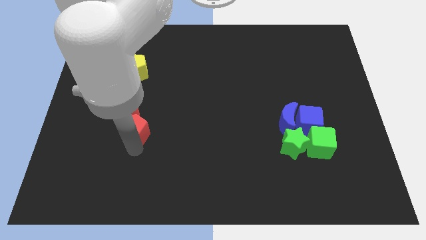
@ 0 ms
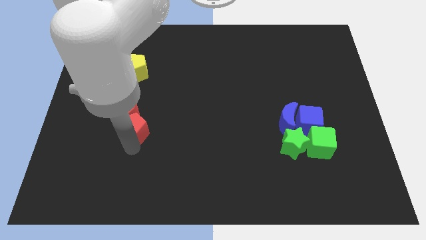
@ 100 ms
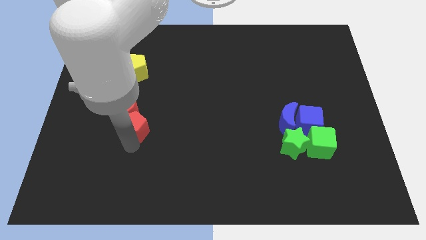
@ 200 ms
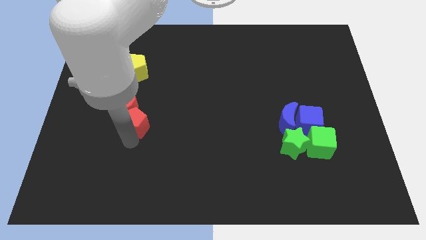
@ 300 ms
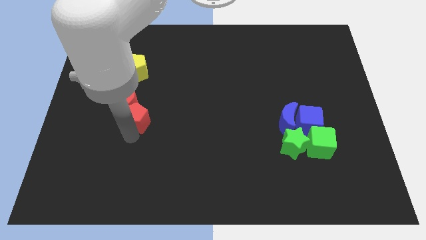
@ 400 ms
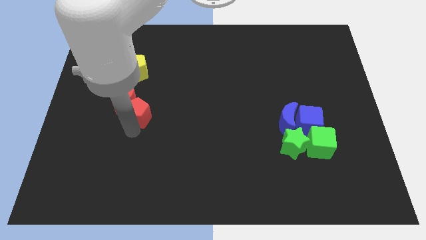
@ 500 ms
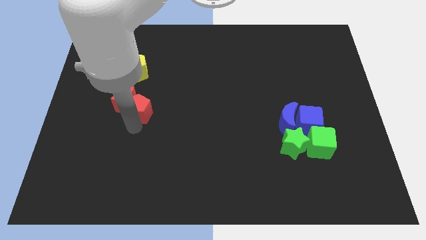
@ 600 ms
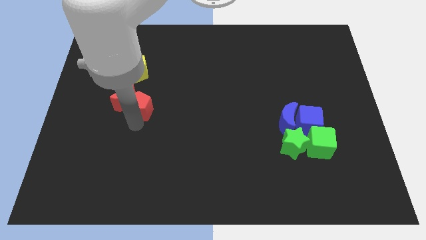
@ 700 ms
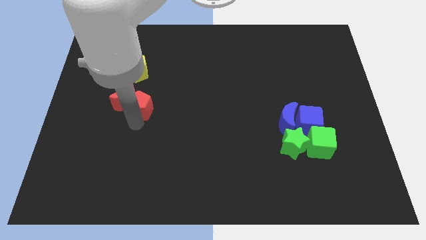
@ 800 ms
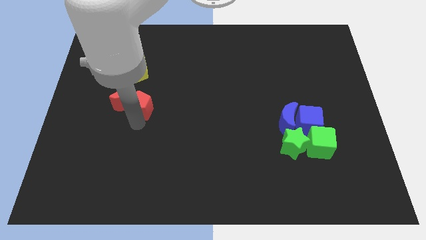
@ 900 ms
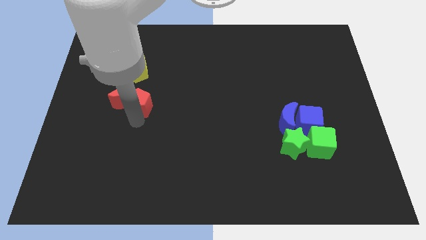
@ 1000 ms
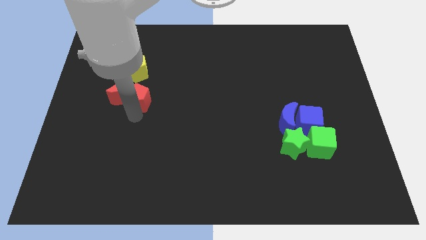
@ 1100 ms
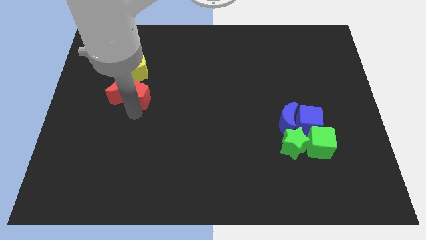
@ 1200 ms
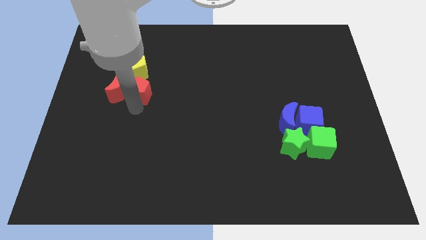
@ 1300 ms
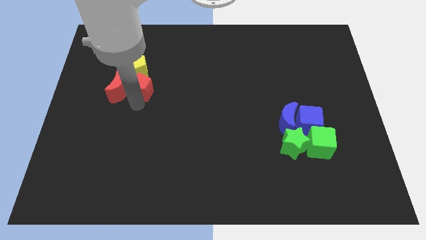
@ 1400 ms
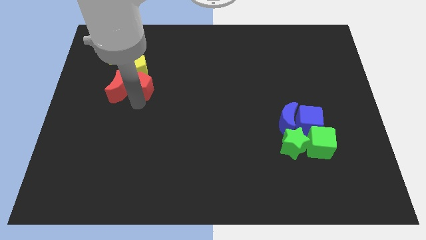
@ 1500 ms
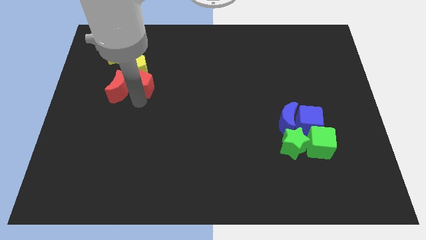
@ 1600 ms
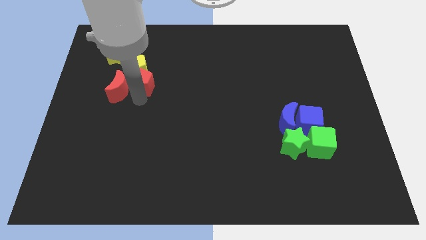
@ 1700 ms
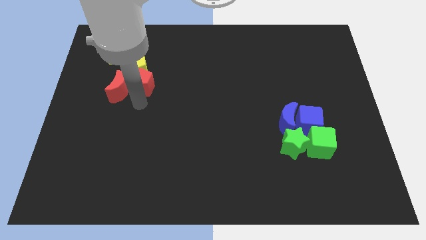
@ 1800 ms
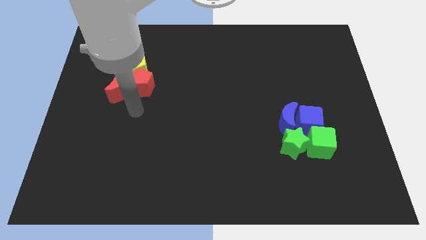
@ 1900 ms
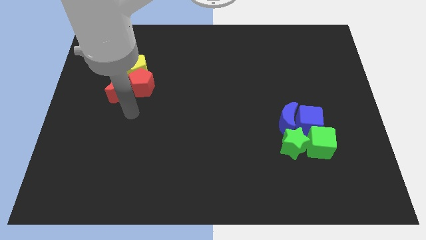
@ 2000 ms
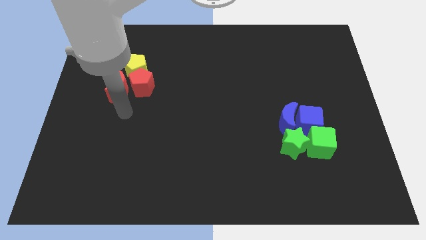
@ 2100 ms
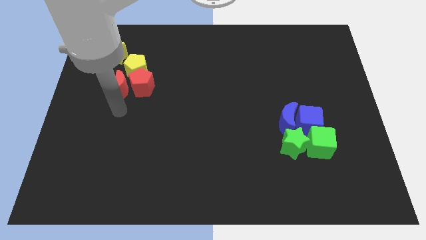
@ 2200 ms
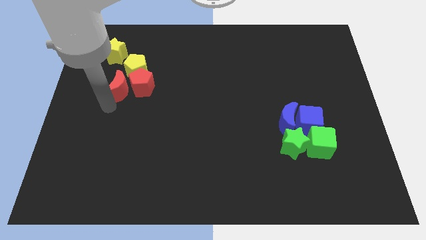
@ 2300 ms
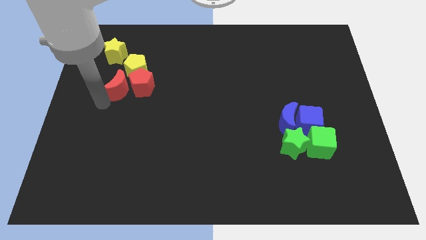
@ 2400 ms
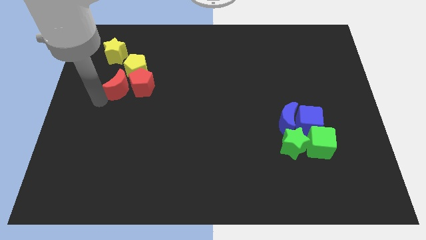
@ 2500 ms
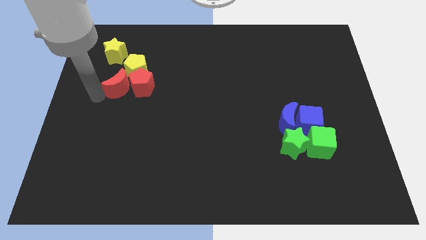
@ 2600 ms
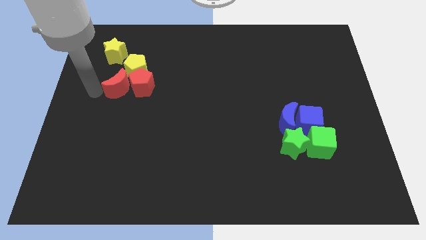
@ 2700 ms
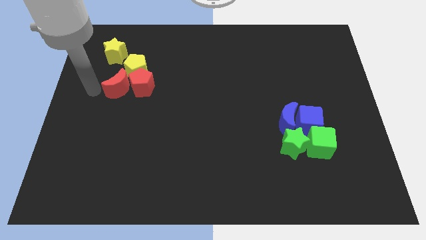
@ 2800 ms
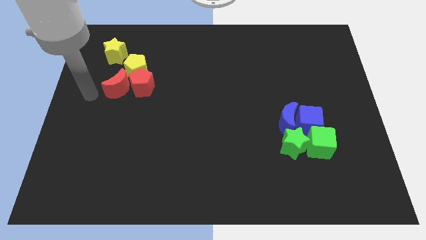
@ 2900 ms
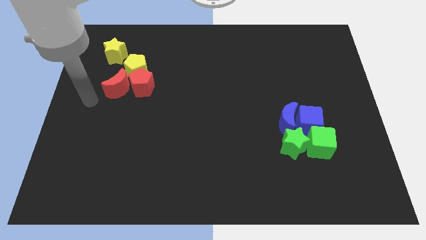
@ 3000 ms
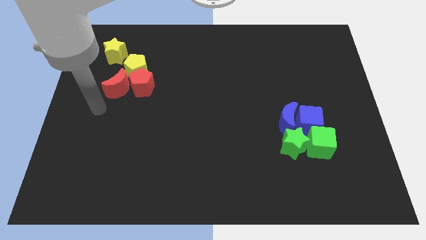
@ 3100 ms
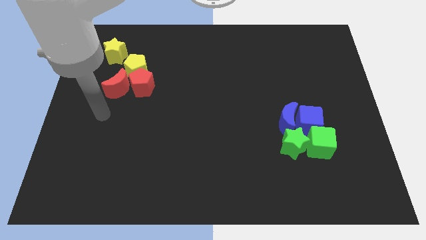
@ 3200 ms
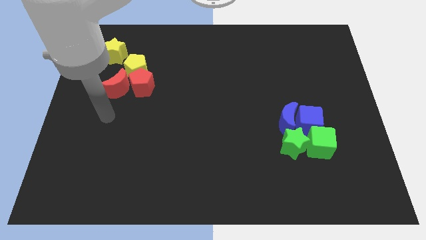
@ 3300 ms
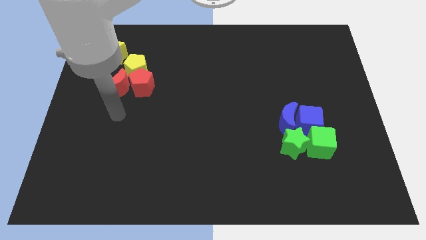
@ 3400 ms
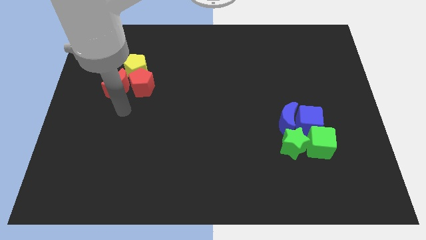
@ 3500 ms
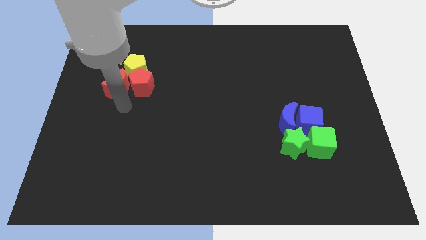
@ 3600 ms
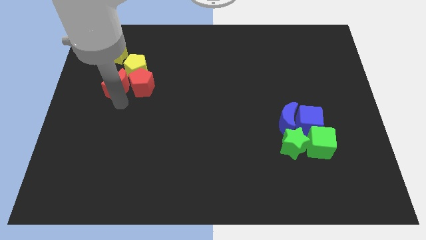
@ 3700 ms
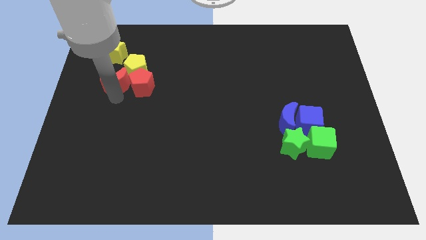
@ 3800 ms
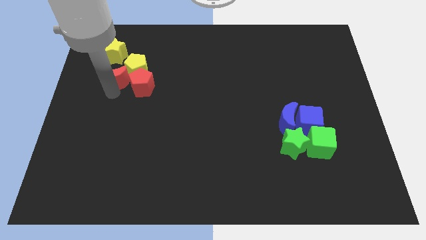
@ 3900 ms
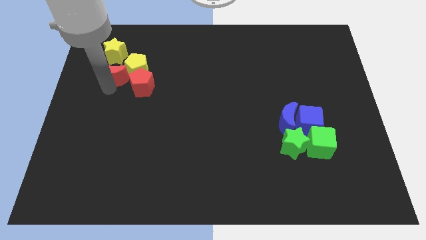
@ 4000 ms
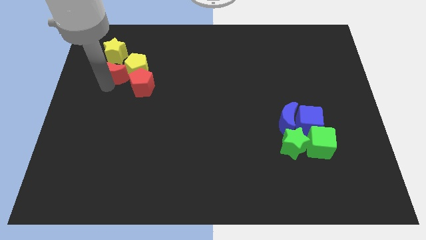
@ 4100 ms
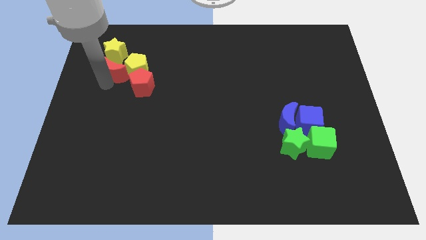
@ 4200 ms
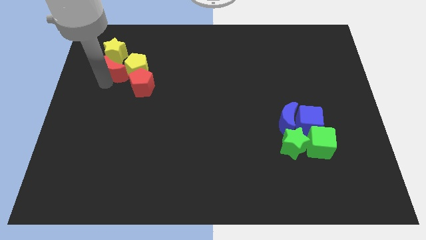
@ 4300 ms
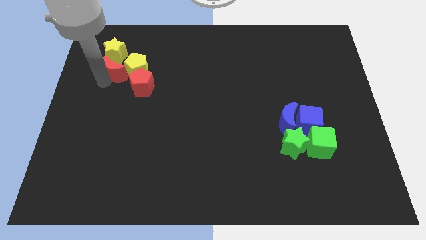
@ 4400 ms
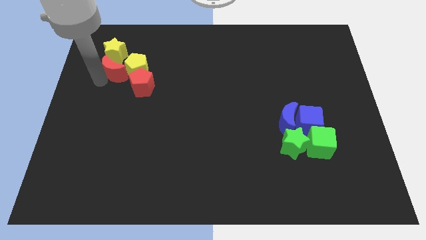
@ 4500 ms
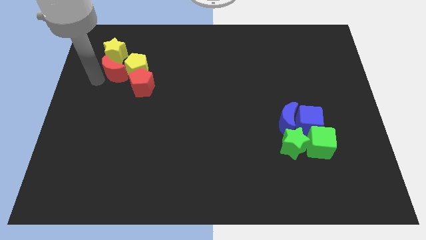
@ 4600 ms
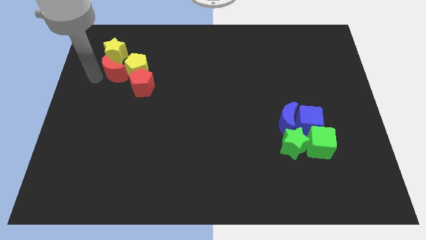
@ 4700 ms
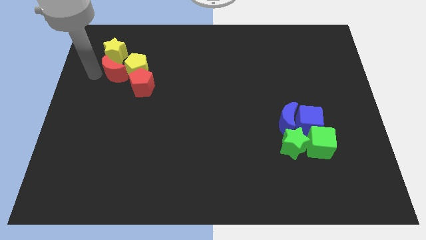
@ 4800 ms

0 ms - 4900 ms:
separate red moon and the red pentagon from each other

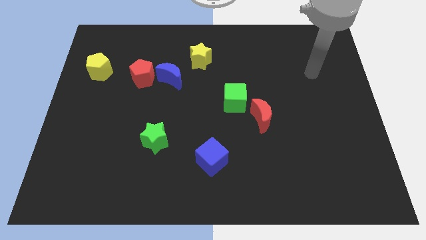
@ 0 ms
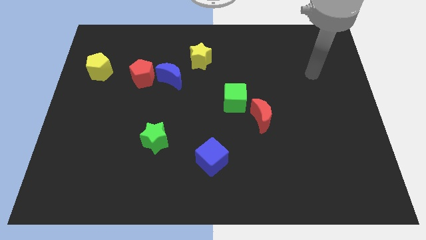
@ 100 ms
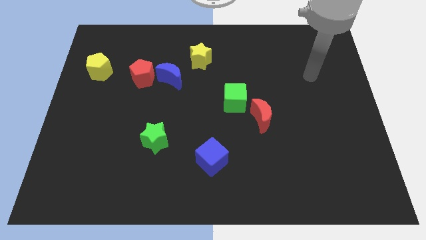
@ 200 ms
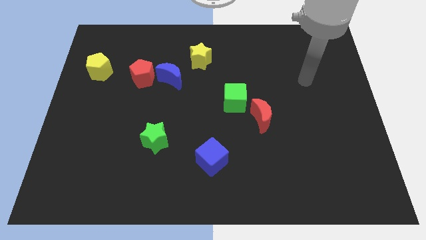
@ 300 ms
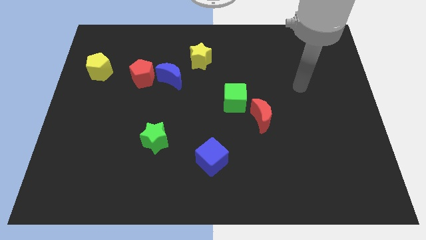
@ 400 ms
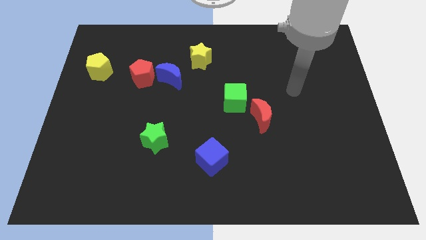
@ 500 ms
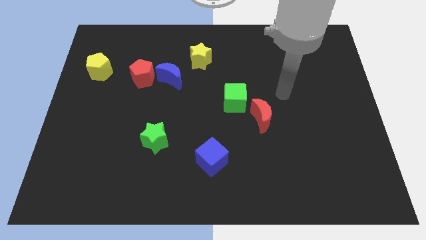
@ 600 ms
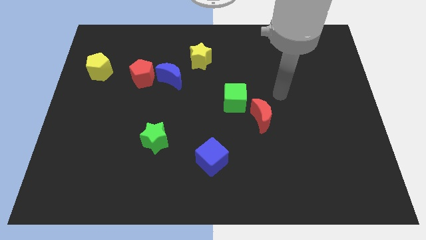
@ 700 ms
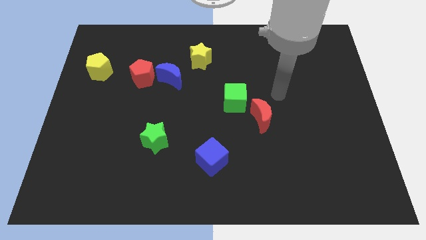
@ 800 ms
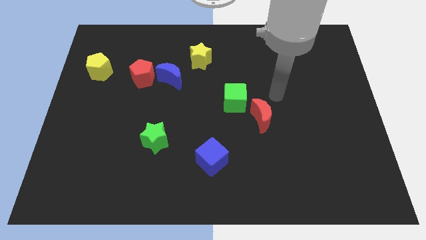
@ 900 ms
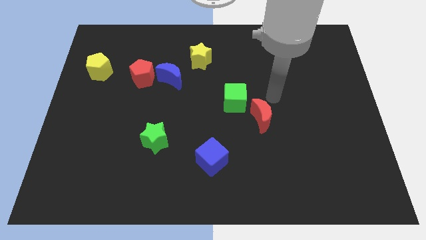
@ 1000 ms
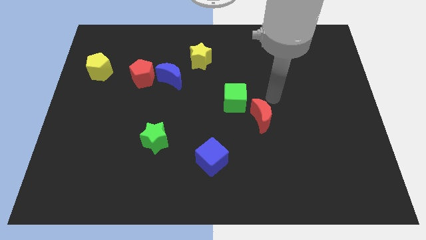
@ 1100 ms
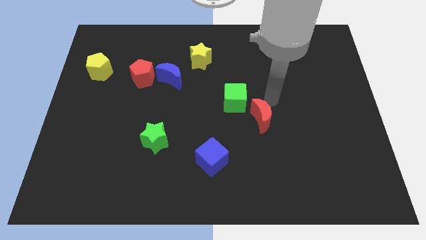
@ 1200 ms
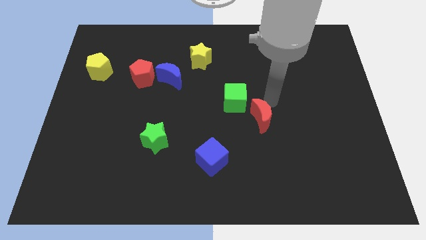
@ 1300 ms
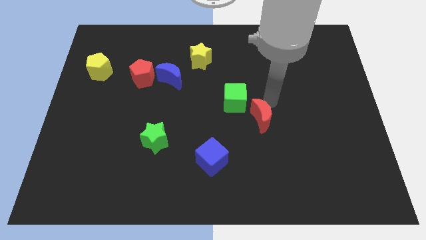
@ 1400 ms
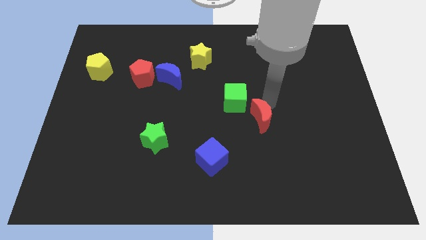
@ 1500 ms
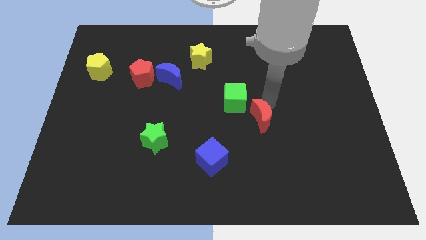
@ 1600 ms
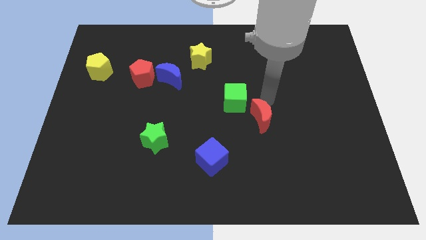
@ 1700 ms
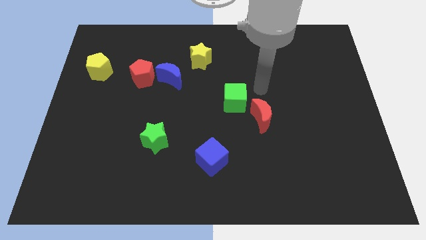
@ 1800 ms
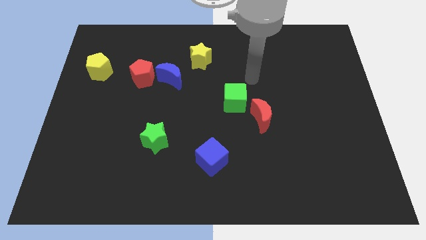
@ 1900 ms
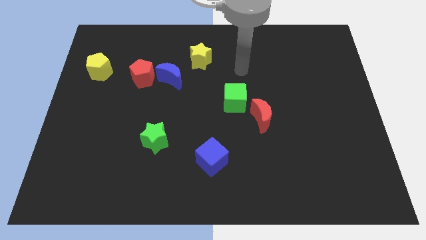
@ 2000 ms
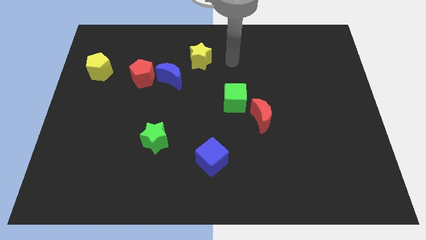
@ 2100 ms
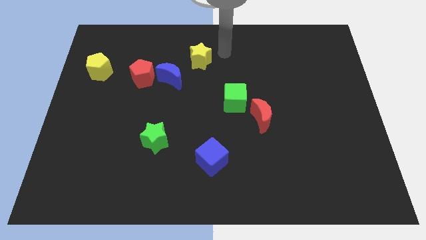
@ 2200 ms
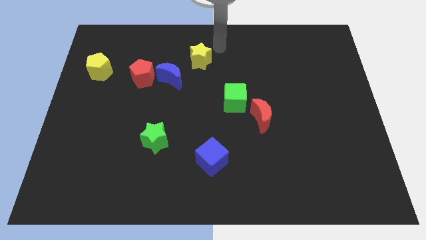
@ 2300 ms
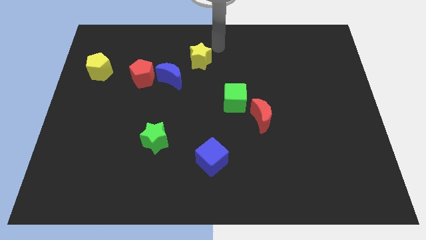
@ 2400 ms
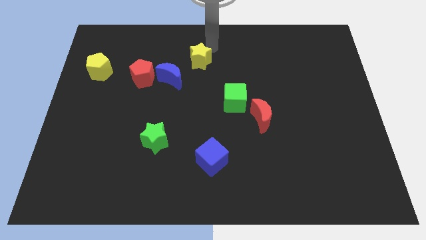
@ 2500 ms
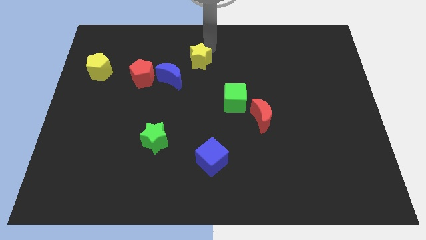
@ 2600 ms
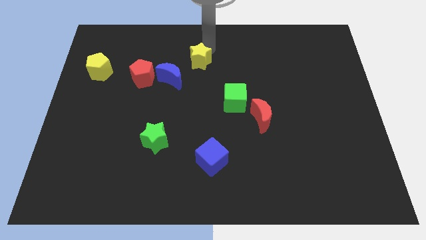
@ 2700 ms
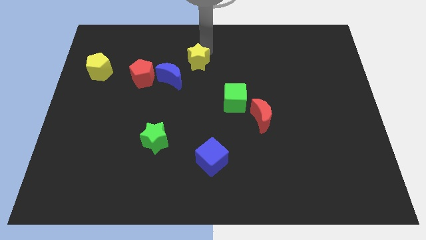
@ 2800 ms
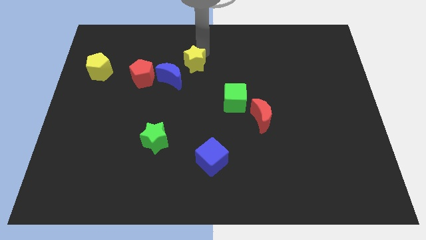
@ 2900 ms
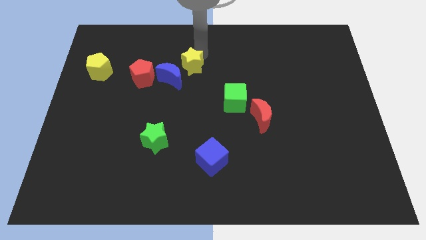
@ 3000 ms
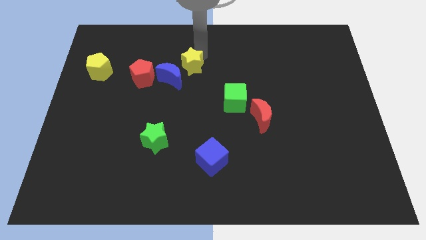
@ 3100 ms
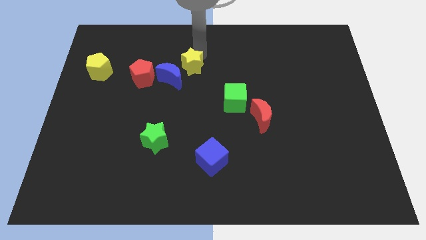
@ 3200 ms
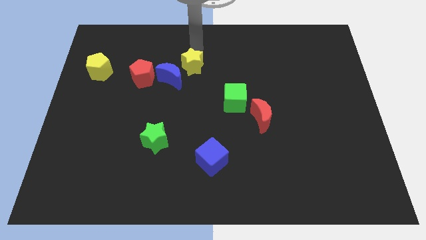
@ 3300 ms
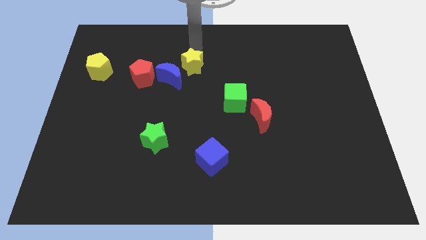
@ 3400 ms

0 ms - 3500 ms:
push yellow star slightly towards blue moon

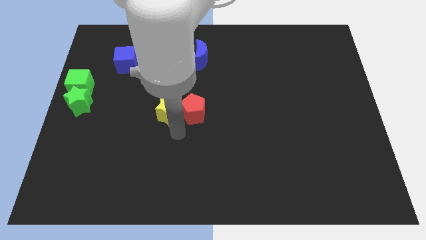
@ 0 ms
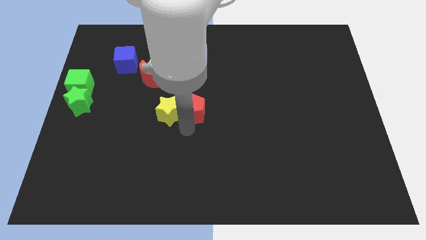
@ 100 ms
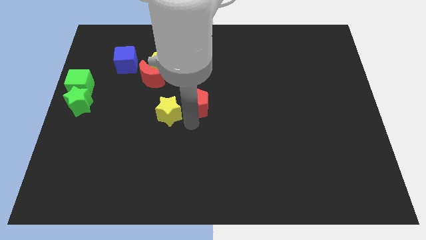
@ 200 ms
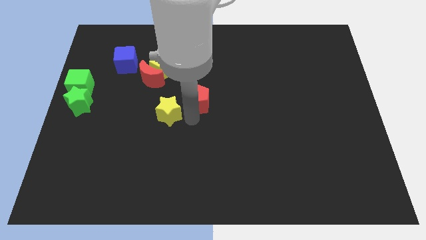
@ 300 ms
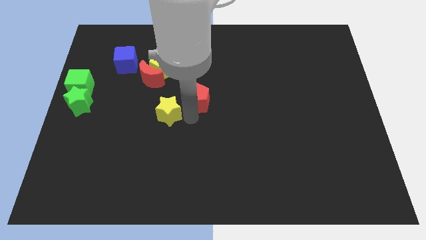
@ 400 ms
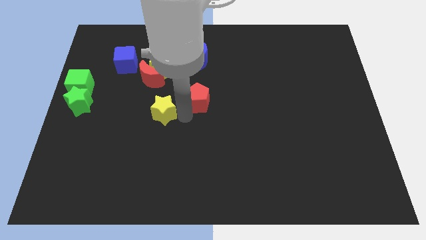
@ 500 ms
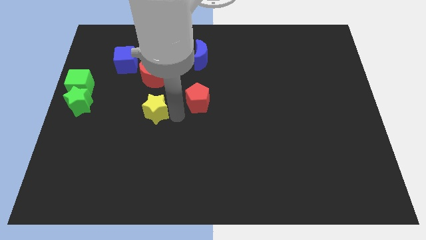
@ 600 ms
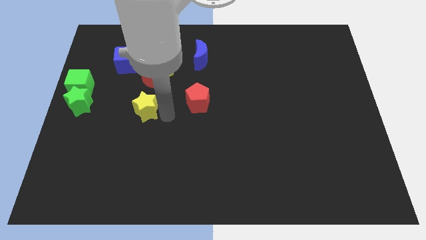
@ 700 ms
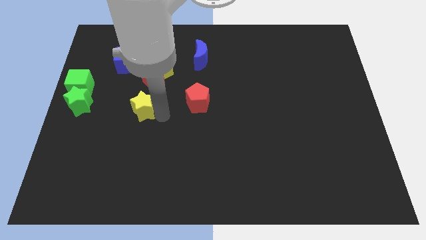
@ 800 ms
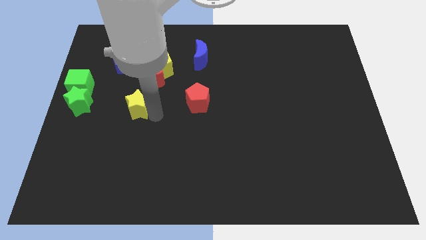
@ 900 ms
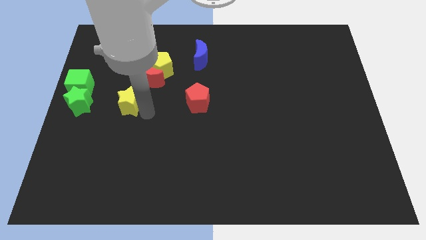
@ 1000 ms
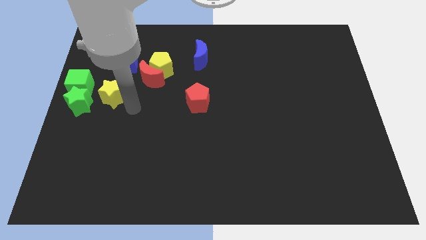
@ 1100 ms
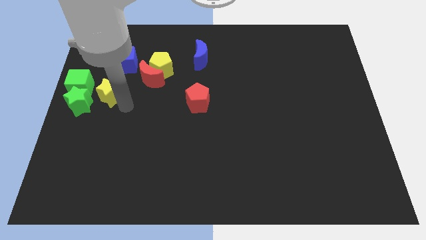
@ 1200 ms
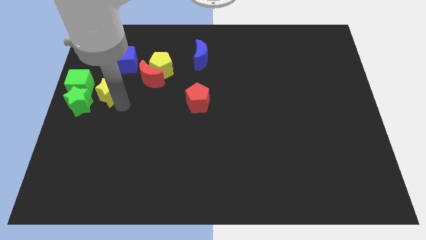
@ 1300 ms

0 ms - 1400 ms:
separate yellow star from the red pentagon
